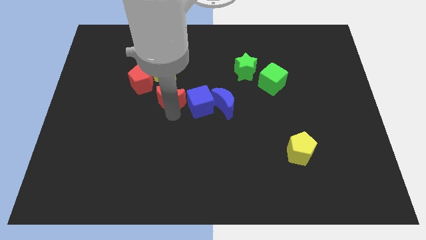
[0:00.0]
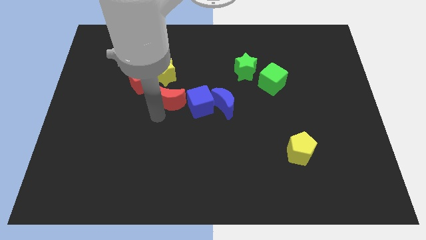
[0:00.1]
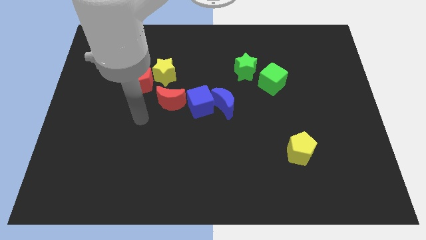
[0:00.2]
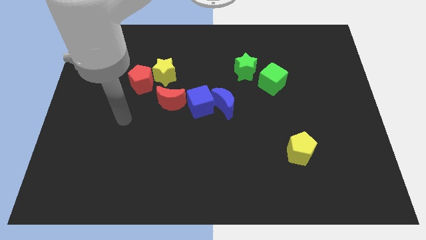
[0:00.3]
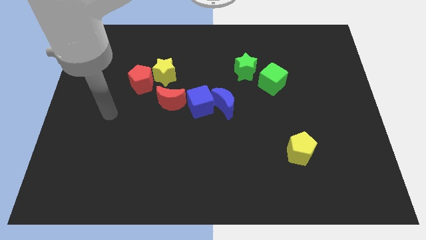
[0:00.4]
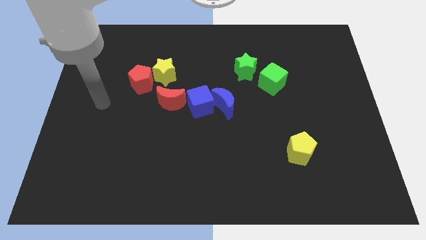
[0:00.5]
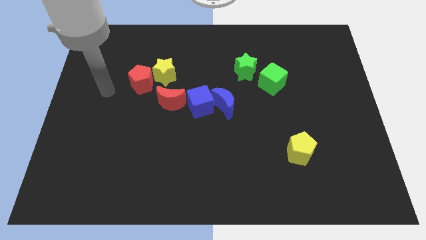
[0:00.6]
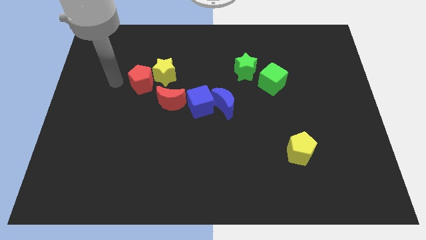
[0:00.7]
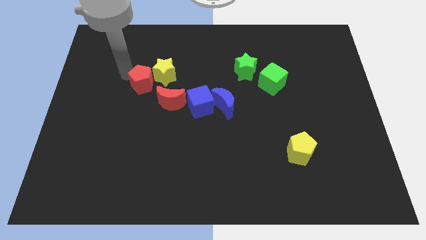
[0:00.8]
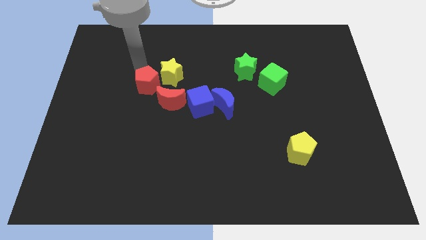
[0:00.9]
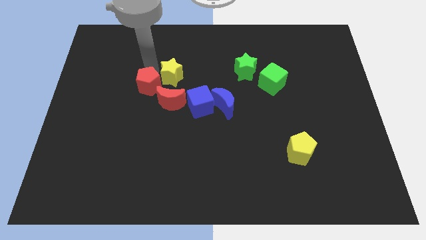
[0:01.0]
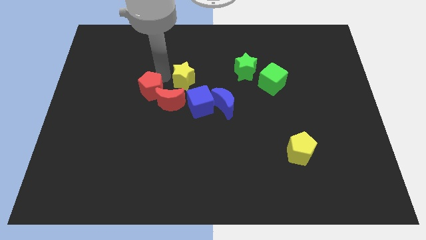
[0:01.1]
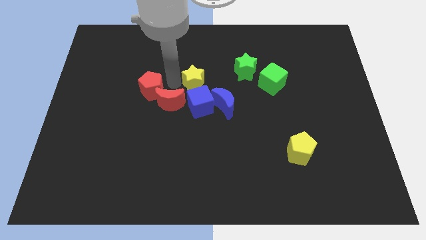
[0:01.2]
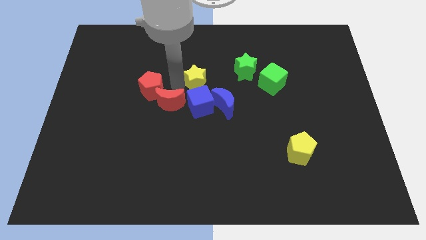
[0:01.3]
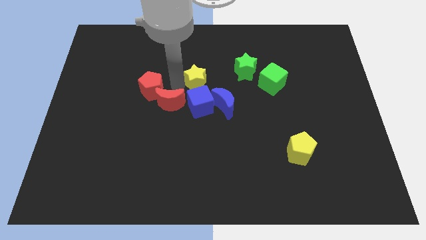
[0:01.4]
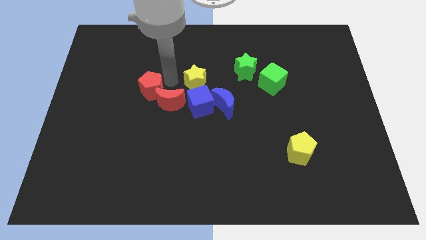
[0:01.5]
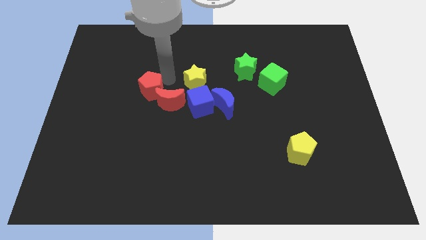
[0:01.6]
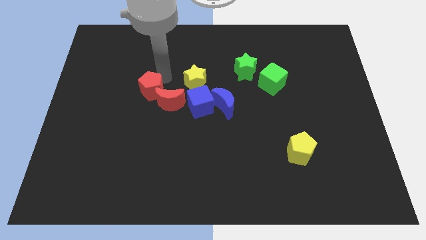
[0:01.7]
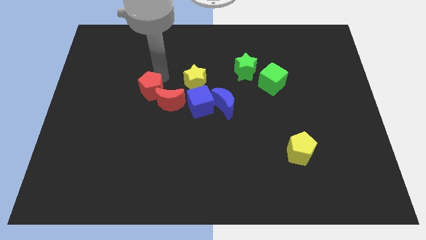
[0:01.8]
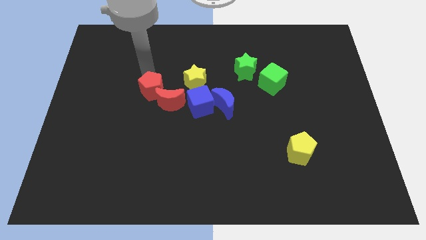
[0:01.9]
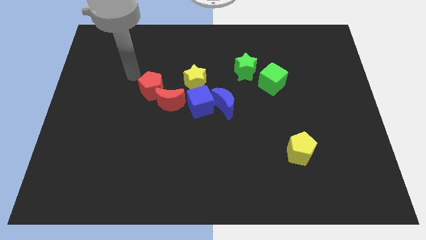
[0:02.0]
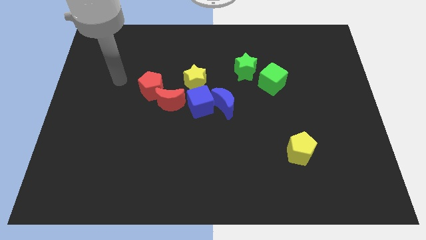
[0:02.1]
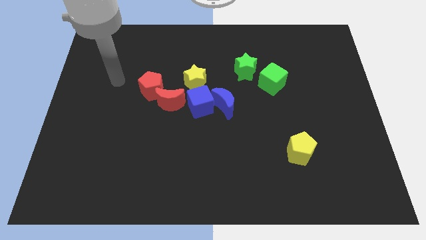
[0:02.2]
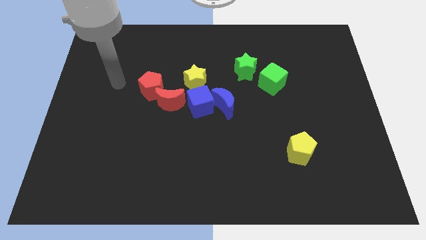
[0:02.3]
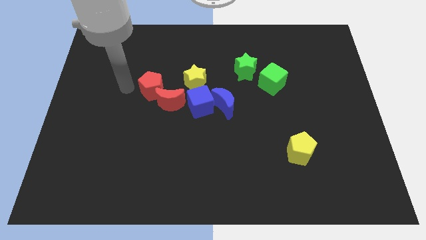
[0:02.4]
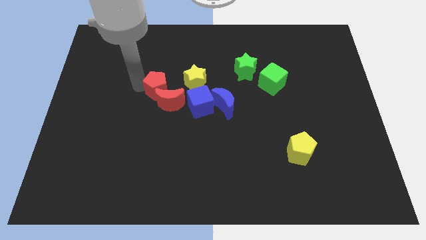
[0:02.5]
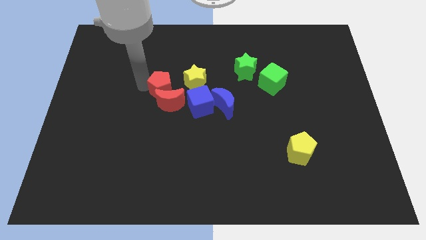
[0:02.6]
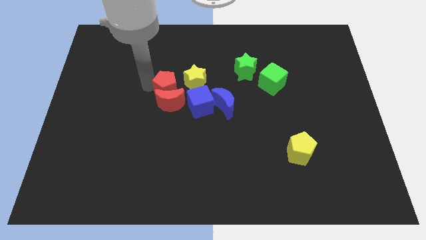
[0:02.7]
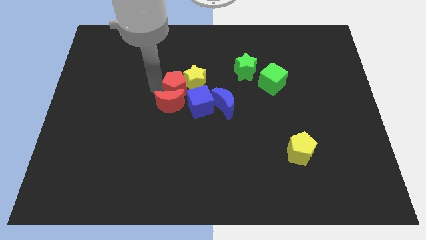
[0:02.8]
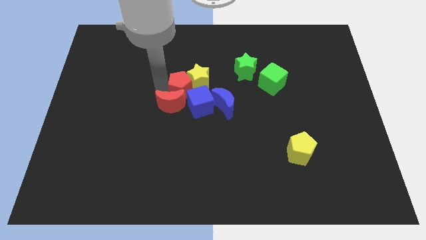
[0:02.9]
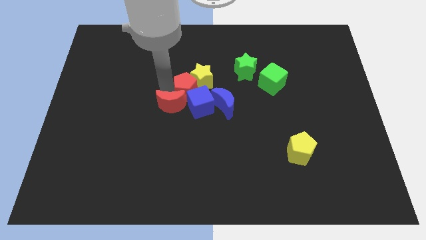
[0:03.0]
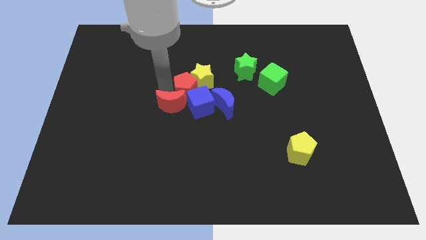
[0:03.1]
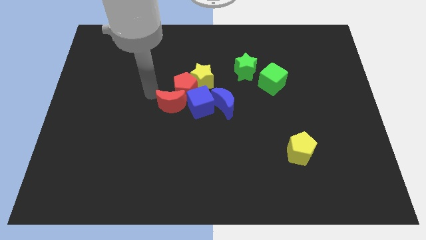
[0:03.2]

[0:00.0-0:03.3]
push the red pentagon and the yellow star to the top right of the red crescent to form a diagonal line

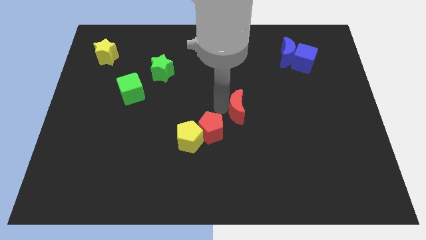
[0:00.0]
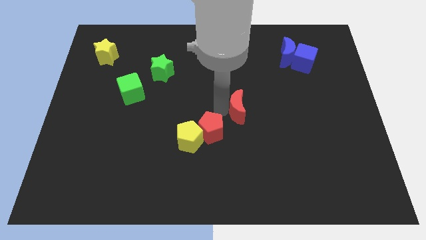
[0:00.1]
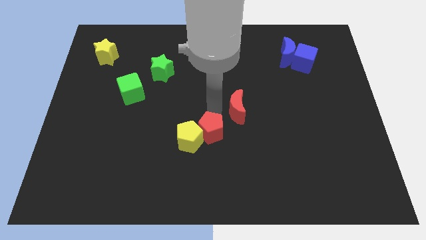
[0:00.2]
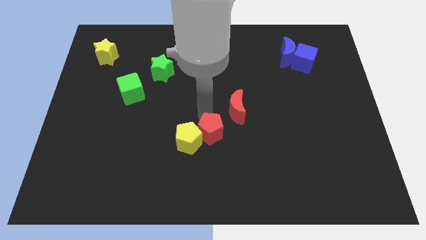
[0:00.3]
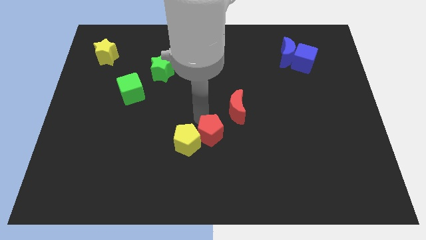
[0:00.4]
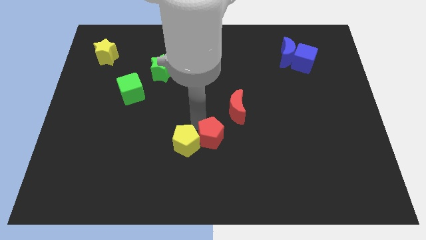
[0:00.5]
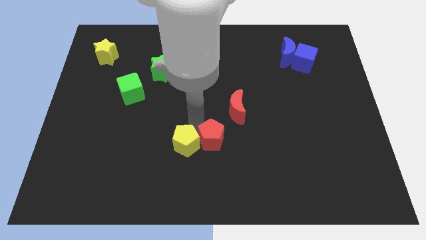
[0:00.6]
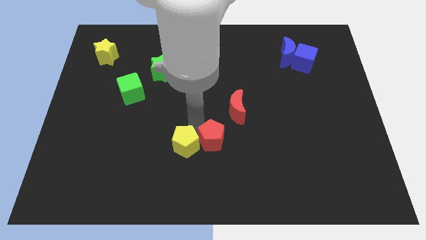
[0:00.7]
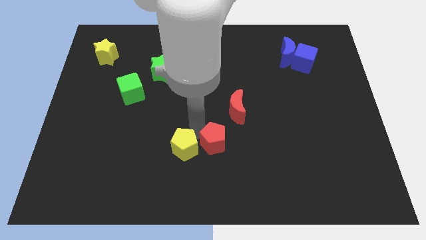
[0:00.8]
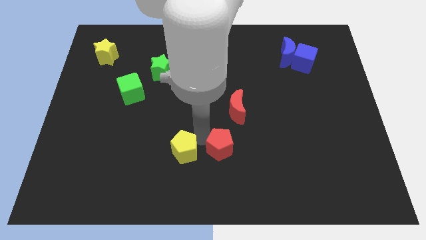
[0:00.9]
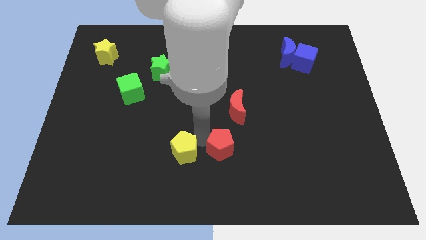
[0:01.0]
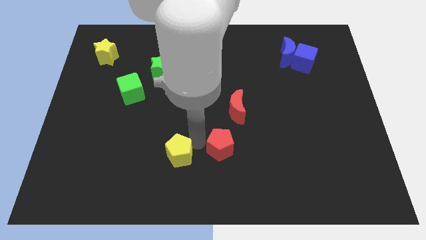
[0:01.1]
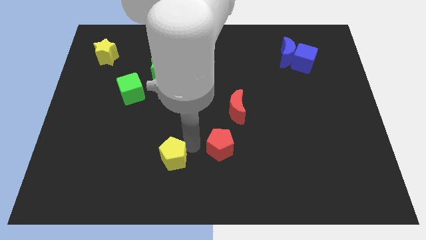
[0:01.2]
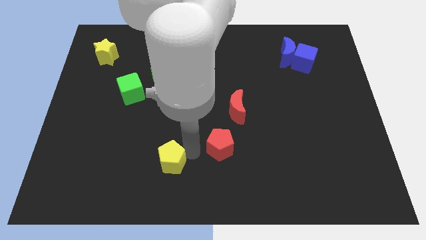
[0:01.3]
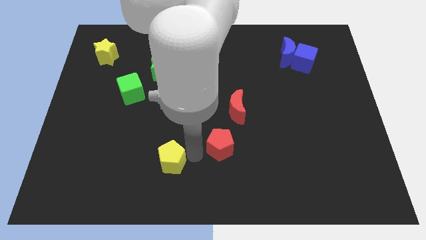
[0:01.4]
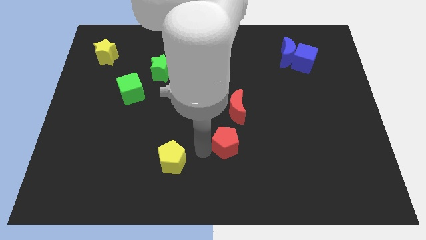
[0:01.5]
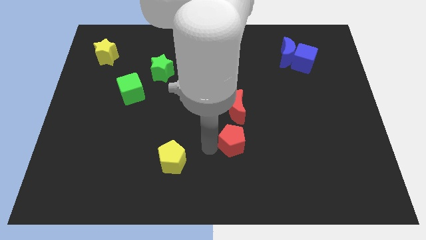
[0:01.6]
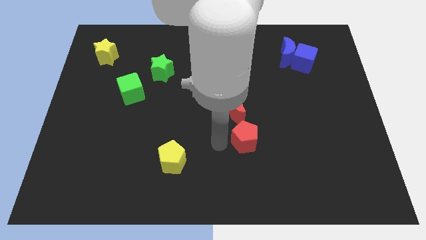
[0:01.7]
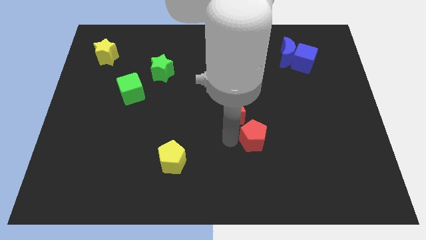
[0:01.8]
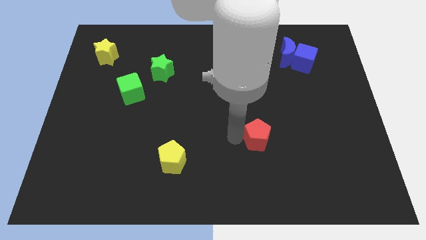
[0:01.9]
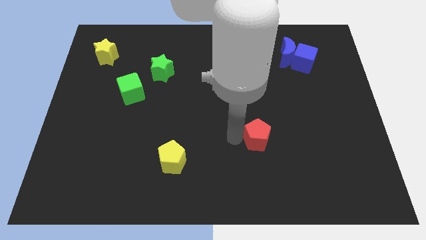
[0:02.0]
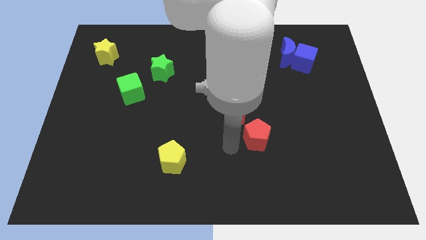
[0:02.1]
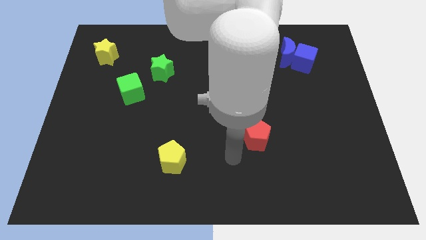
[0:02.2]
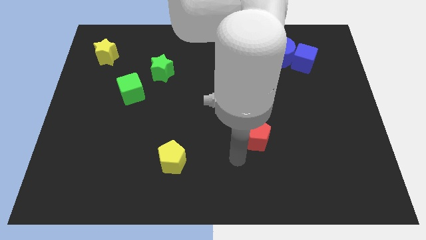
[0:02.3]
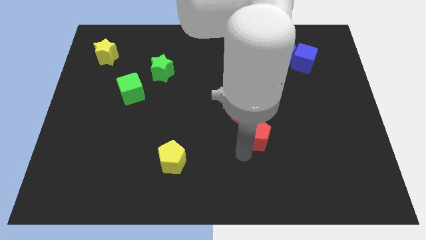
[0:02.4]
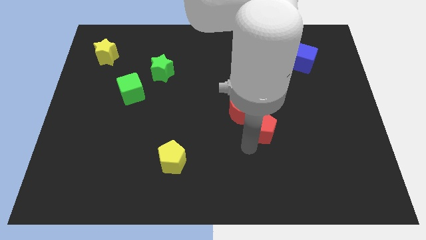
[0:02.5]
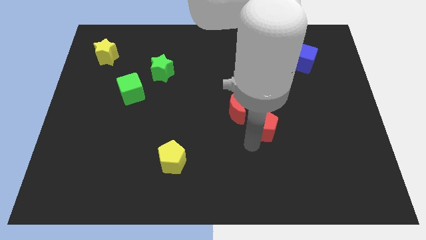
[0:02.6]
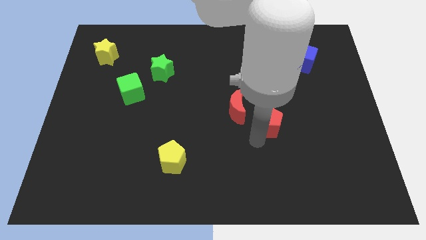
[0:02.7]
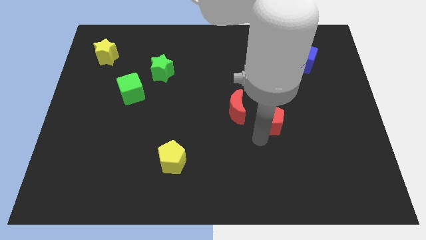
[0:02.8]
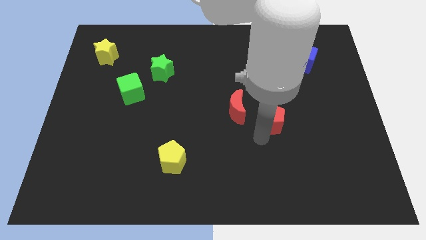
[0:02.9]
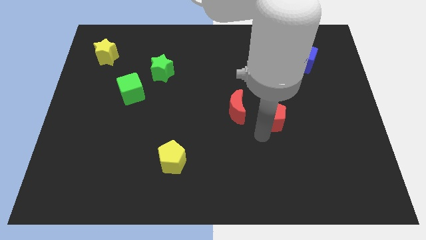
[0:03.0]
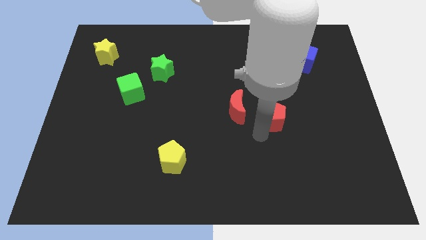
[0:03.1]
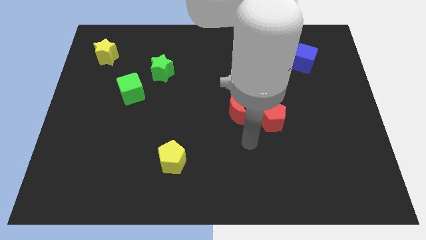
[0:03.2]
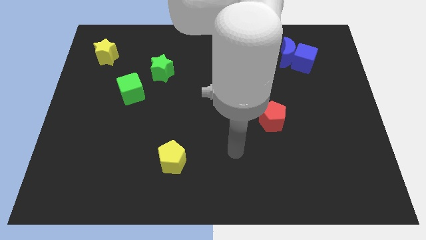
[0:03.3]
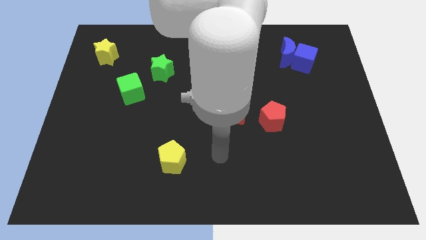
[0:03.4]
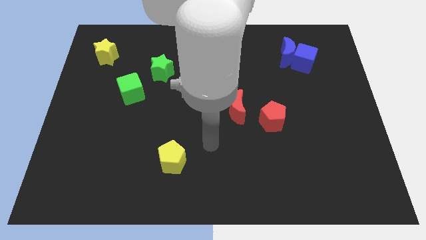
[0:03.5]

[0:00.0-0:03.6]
separate the red pentagon from the yellow pentagon

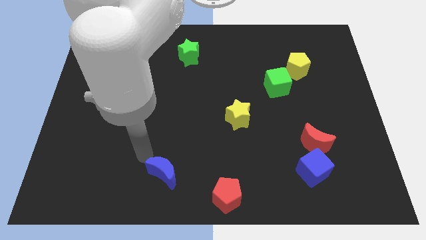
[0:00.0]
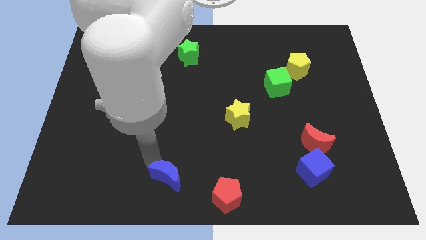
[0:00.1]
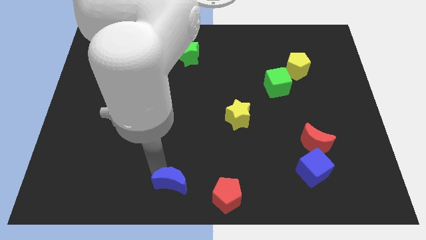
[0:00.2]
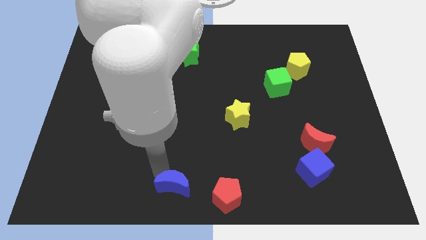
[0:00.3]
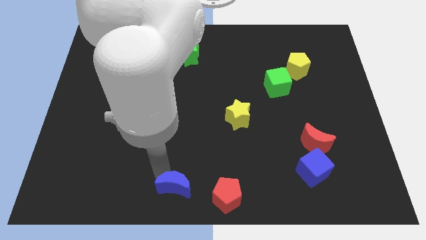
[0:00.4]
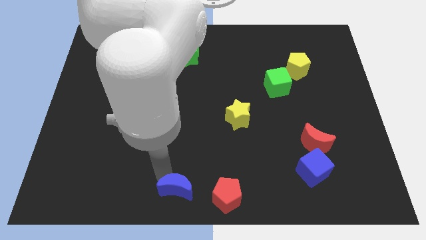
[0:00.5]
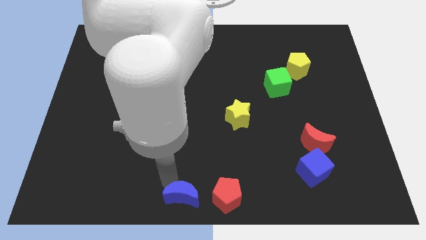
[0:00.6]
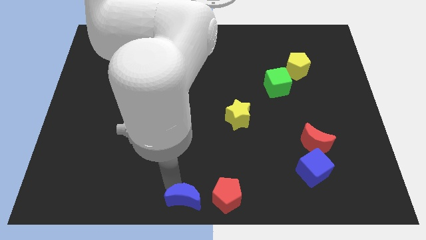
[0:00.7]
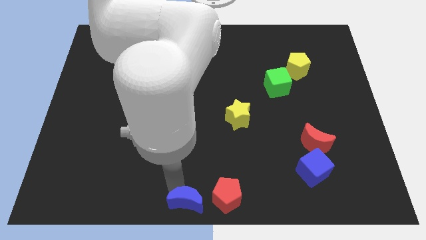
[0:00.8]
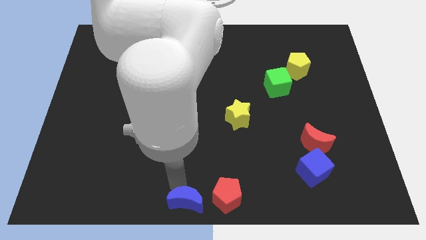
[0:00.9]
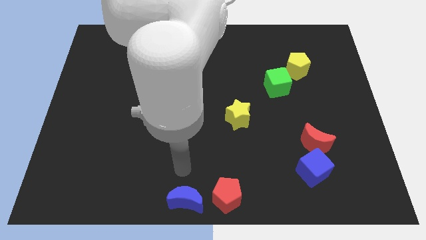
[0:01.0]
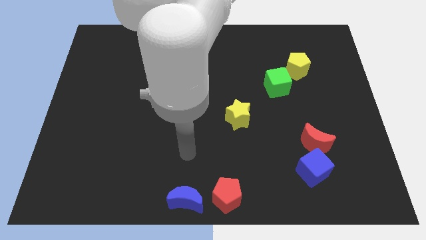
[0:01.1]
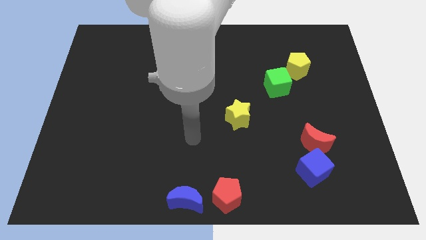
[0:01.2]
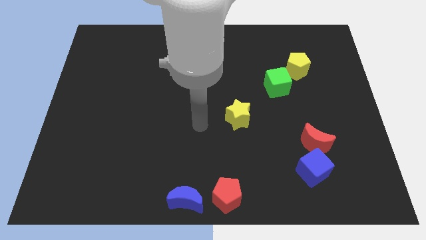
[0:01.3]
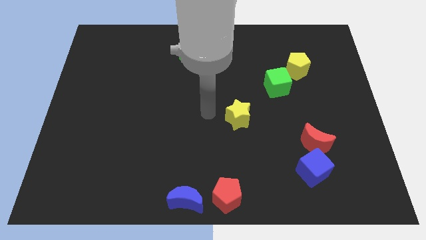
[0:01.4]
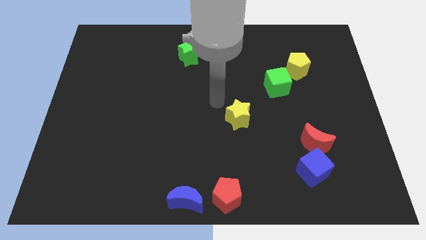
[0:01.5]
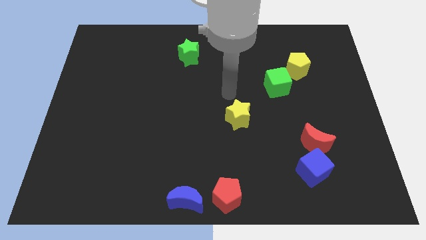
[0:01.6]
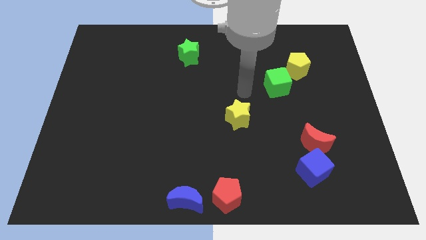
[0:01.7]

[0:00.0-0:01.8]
push the blue crescent towards the red pentagon

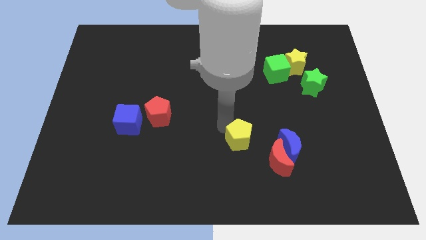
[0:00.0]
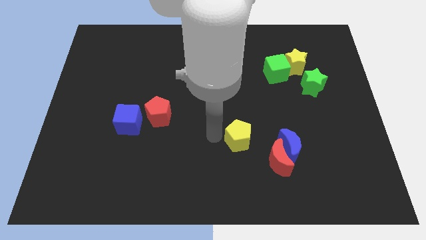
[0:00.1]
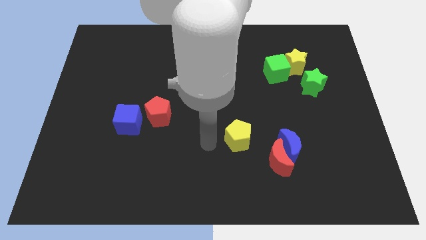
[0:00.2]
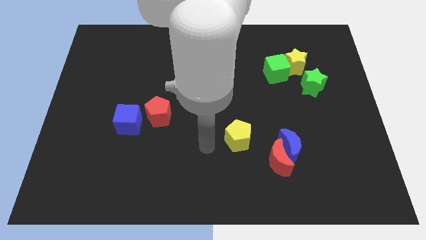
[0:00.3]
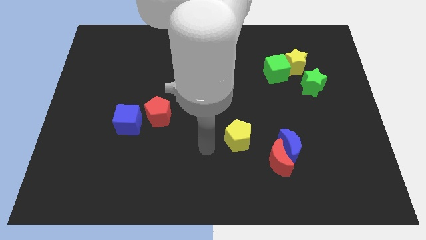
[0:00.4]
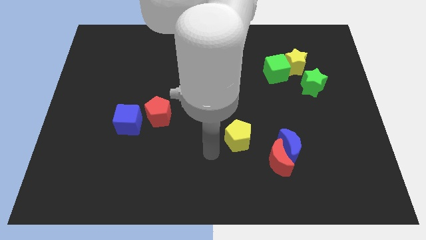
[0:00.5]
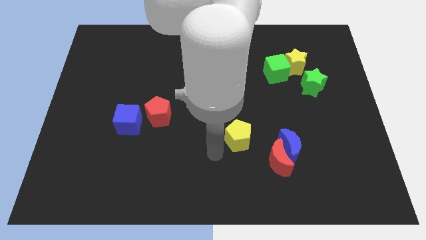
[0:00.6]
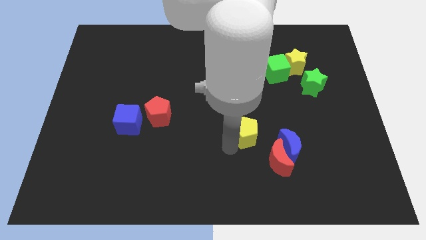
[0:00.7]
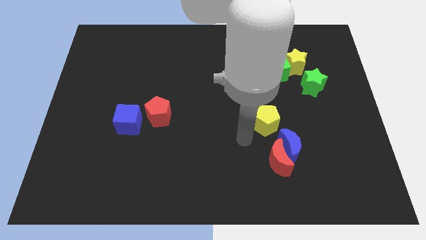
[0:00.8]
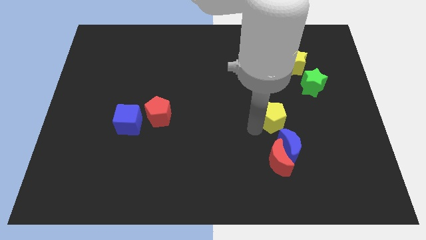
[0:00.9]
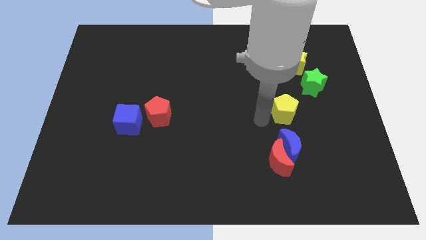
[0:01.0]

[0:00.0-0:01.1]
put the yellow pentagon above the blue crescent
